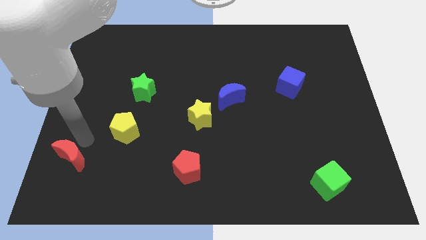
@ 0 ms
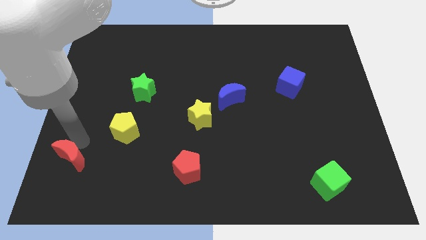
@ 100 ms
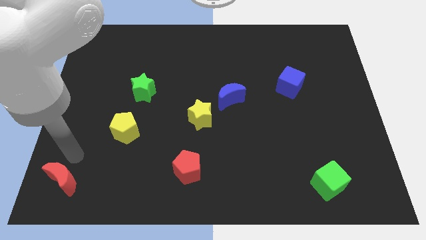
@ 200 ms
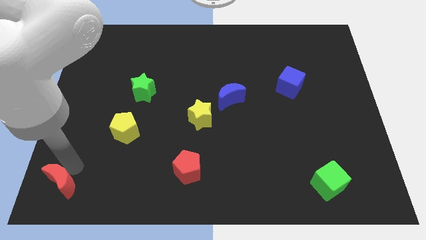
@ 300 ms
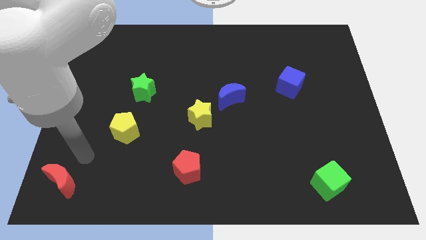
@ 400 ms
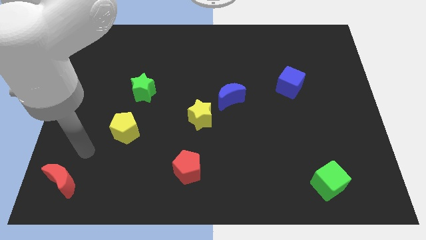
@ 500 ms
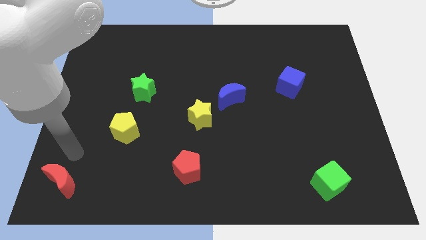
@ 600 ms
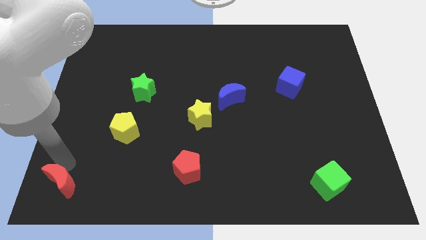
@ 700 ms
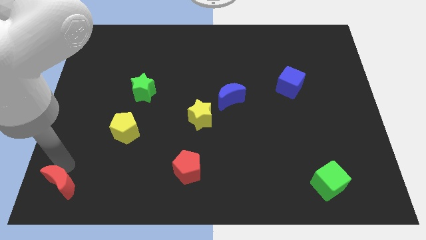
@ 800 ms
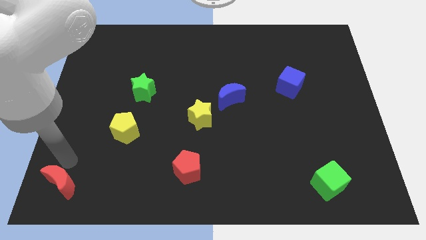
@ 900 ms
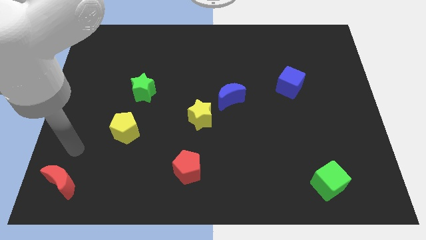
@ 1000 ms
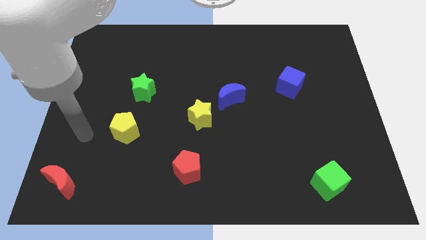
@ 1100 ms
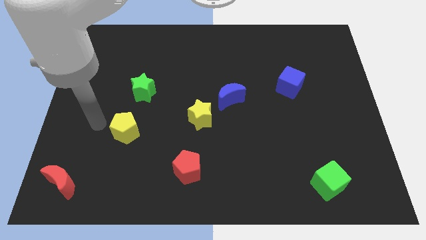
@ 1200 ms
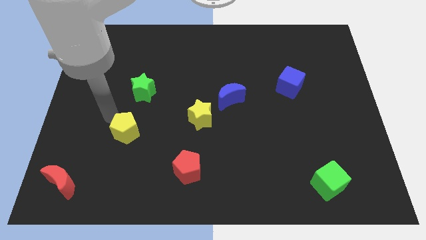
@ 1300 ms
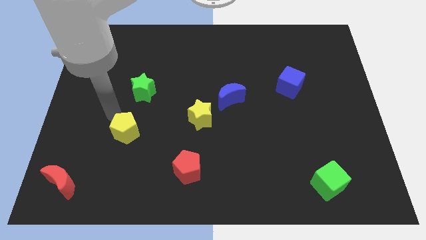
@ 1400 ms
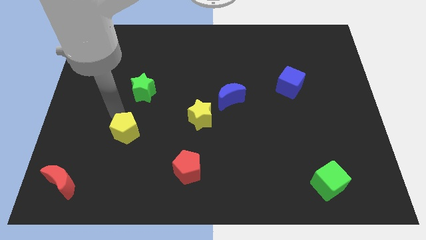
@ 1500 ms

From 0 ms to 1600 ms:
move the red moon to the bottom left of the board

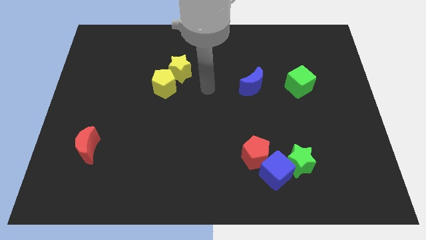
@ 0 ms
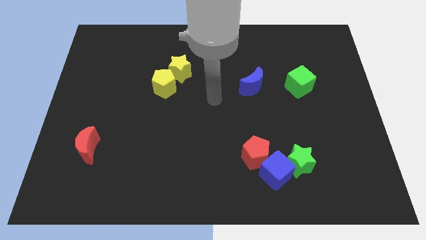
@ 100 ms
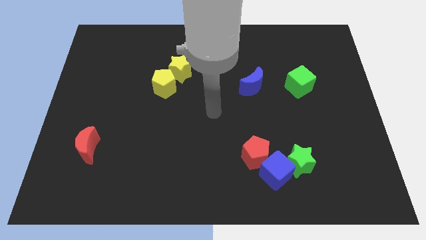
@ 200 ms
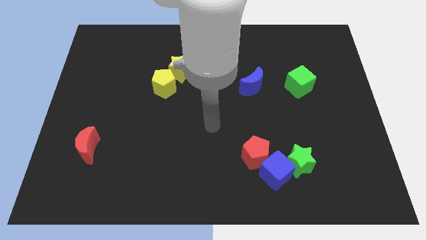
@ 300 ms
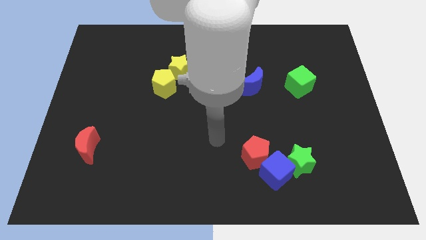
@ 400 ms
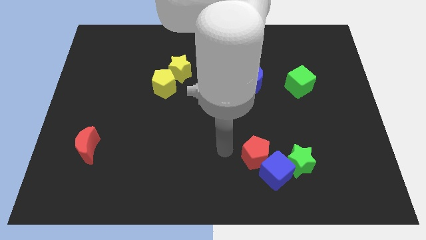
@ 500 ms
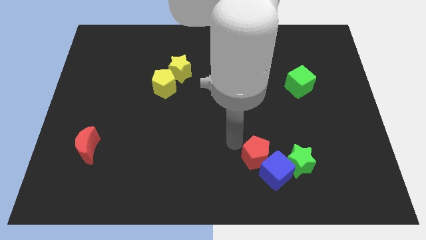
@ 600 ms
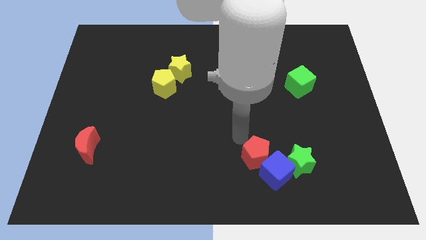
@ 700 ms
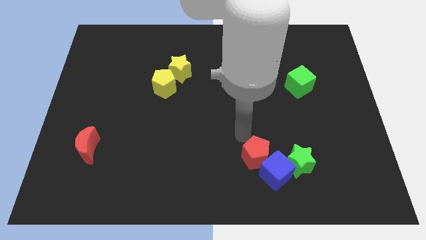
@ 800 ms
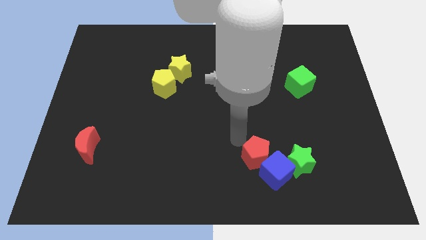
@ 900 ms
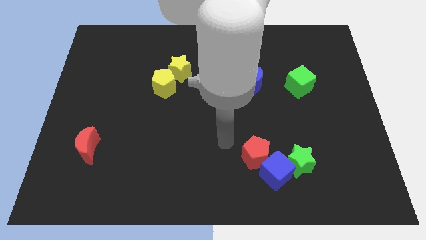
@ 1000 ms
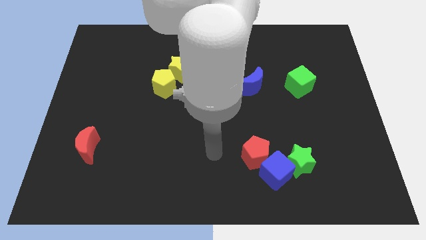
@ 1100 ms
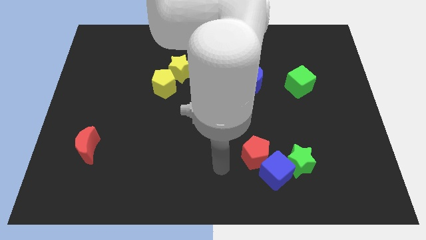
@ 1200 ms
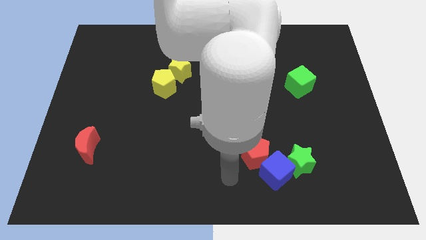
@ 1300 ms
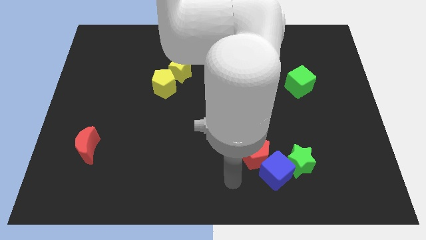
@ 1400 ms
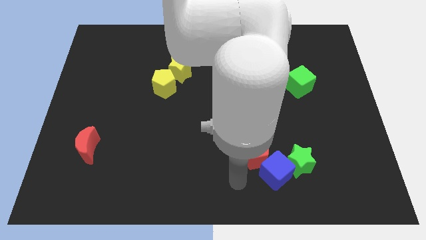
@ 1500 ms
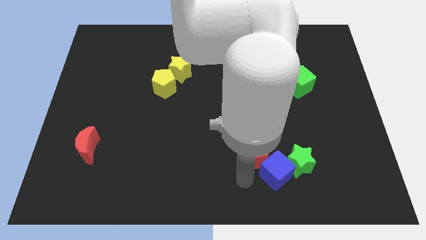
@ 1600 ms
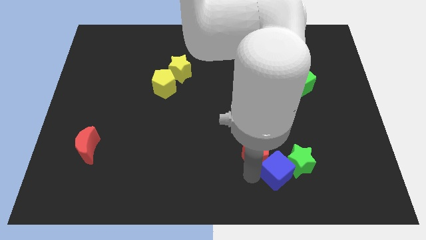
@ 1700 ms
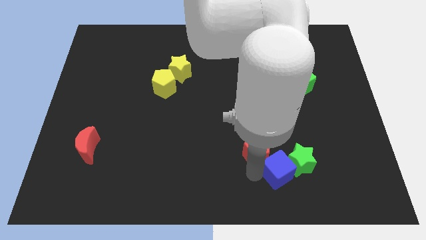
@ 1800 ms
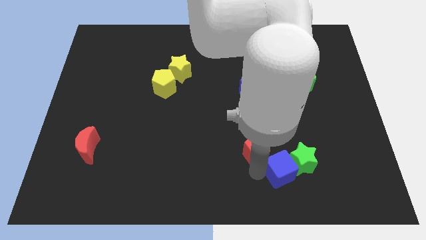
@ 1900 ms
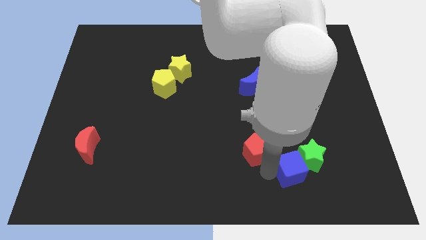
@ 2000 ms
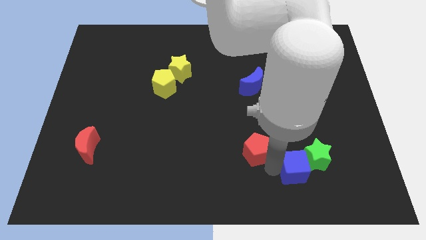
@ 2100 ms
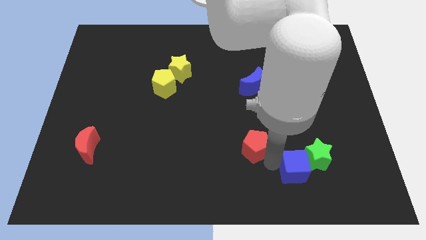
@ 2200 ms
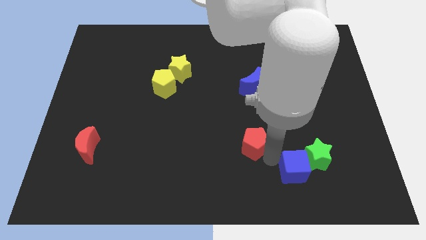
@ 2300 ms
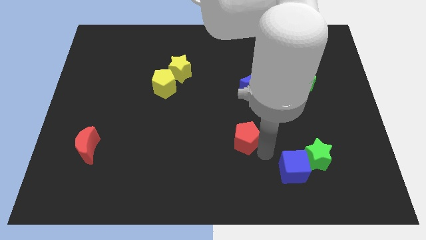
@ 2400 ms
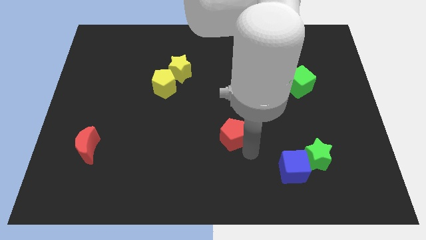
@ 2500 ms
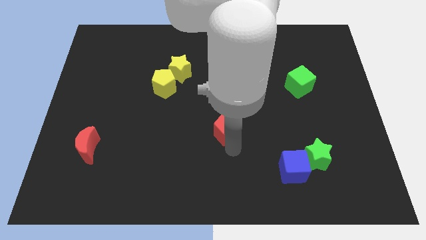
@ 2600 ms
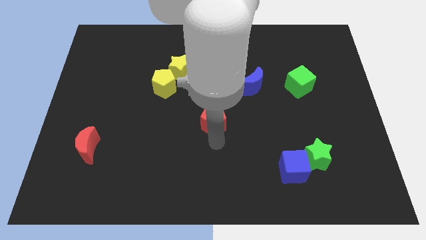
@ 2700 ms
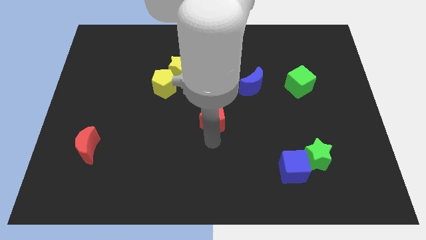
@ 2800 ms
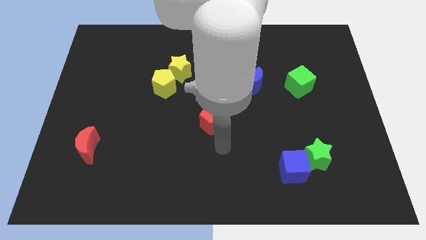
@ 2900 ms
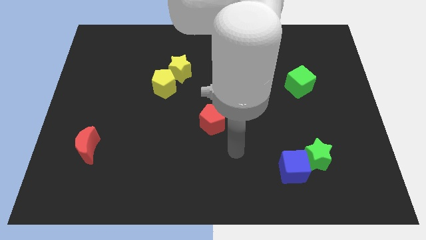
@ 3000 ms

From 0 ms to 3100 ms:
push the blue cube into the green star

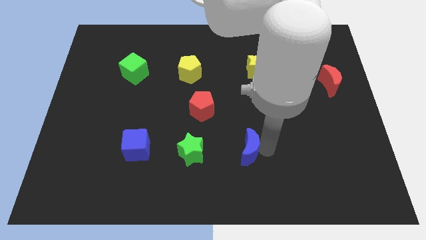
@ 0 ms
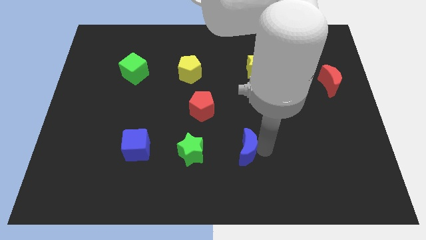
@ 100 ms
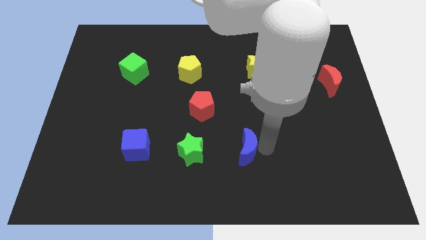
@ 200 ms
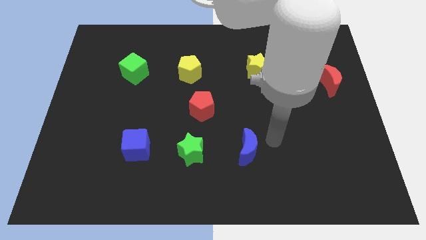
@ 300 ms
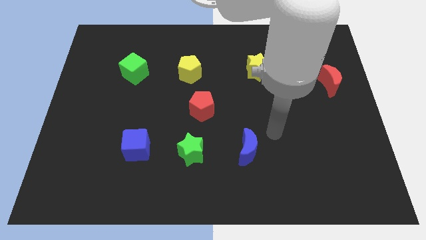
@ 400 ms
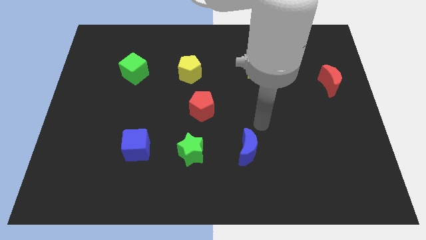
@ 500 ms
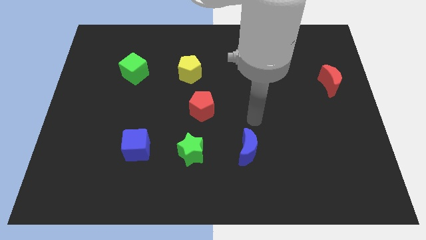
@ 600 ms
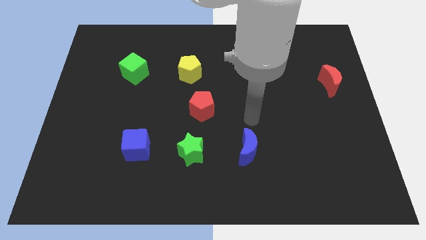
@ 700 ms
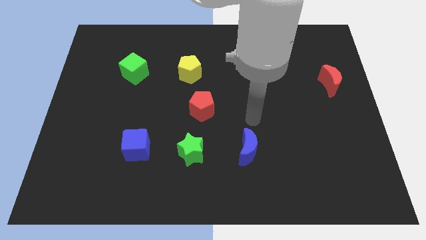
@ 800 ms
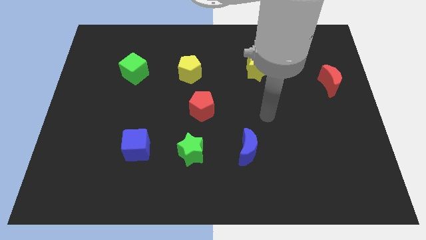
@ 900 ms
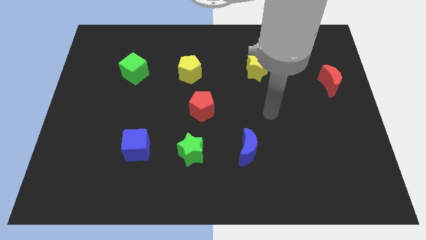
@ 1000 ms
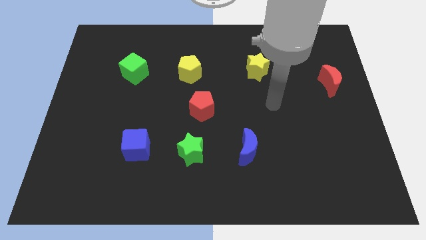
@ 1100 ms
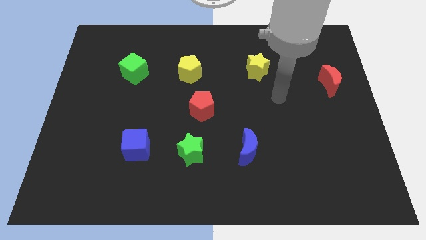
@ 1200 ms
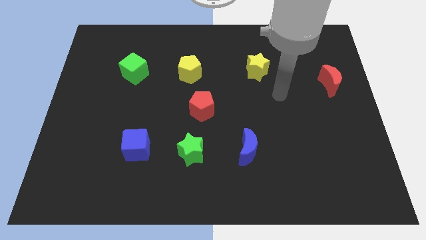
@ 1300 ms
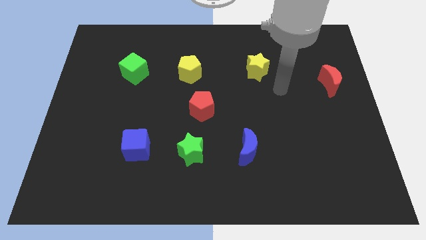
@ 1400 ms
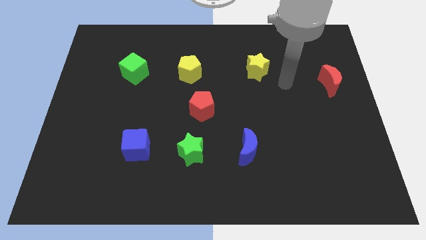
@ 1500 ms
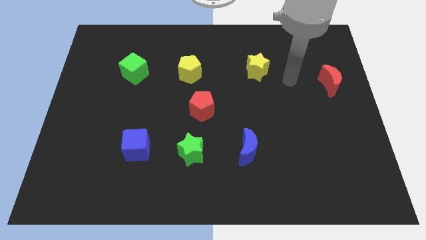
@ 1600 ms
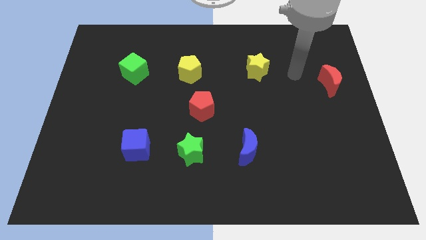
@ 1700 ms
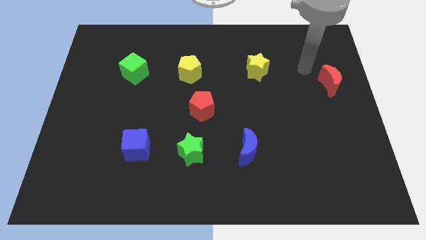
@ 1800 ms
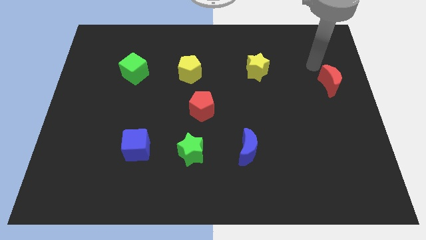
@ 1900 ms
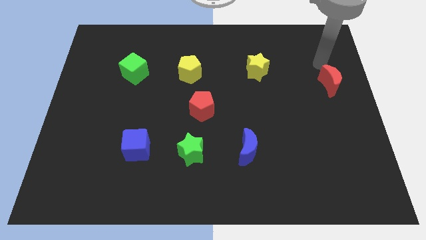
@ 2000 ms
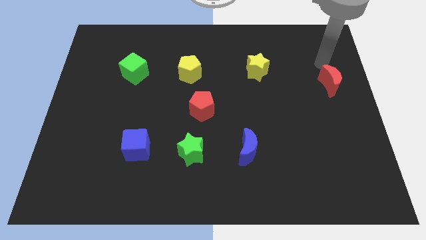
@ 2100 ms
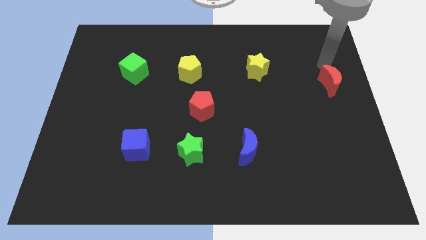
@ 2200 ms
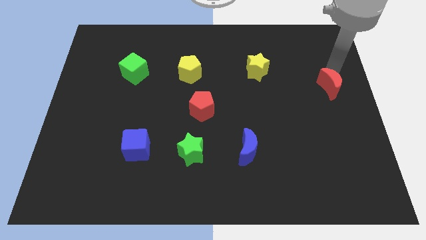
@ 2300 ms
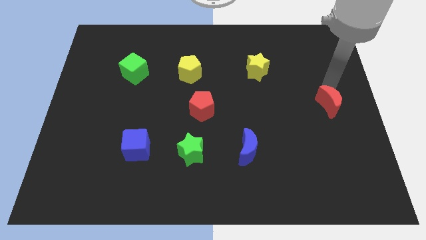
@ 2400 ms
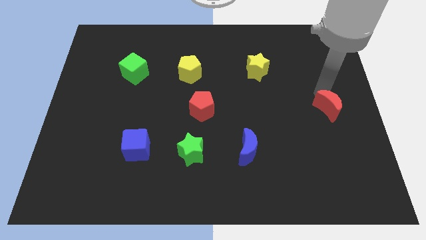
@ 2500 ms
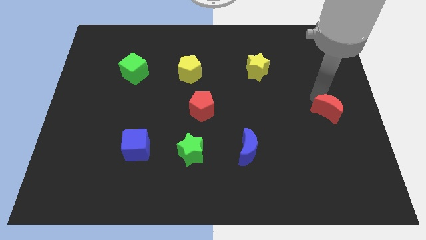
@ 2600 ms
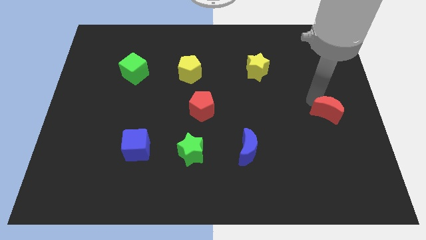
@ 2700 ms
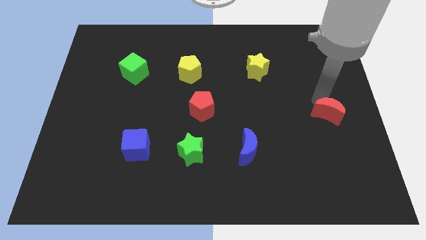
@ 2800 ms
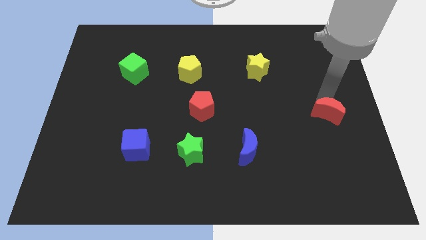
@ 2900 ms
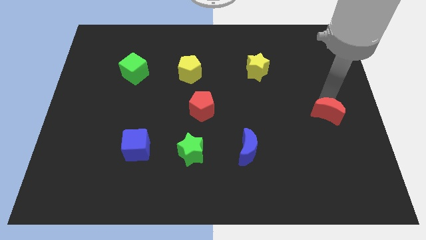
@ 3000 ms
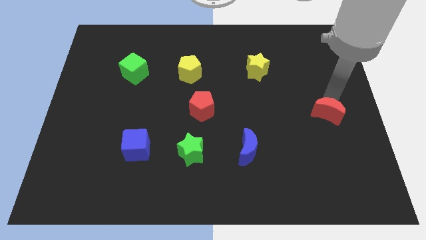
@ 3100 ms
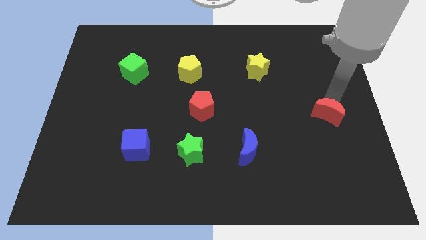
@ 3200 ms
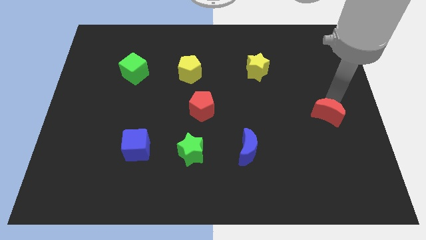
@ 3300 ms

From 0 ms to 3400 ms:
move the red crescent

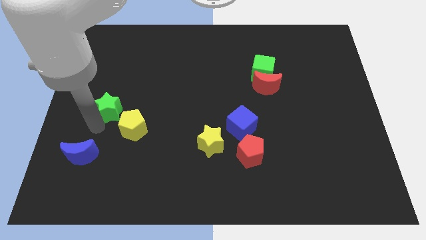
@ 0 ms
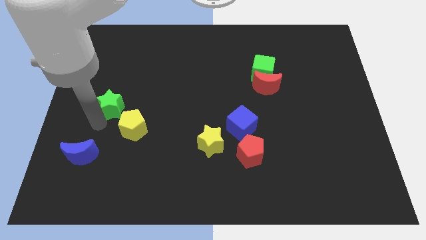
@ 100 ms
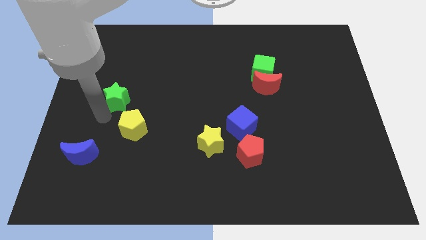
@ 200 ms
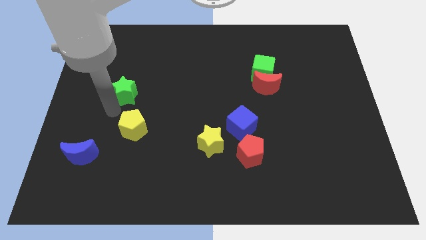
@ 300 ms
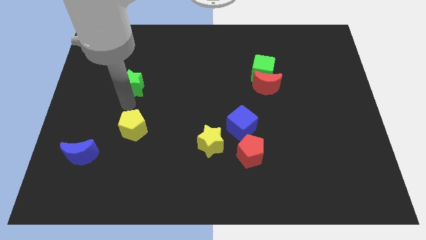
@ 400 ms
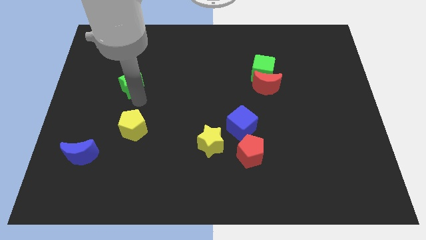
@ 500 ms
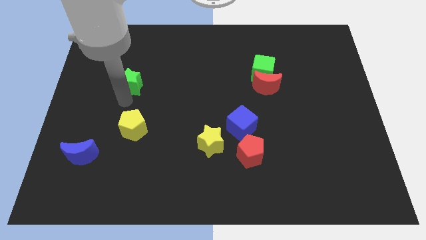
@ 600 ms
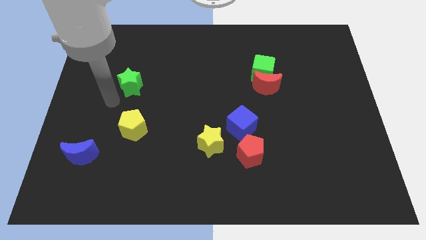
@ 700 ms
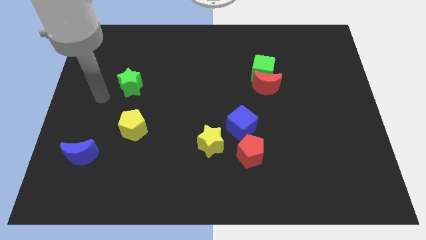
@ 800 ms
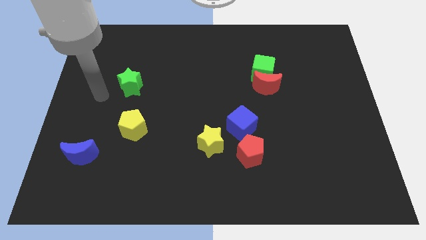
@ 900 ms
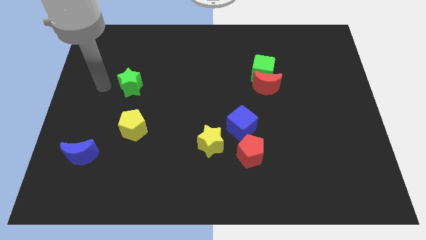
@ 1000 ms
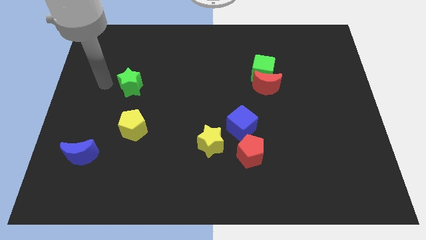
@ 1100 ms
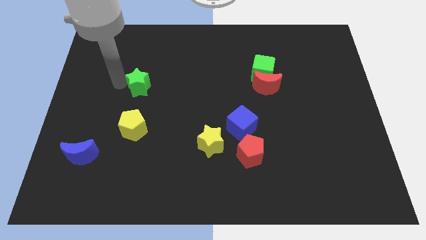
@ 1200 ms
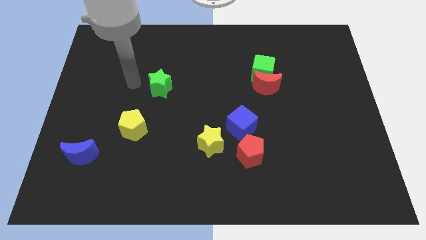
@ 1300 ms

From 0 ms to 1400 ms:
move the green star diagonally on the top right side of the yellow pentagon
